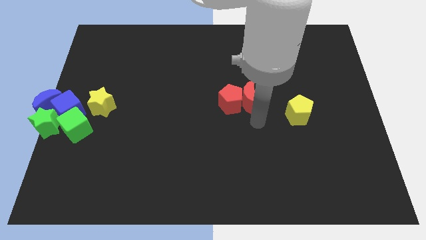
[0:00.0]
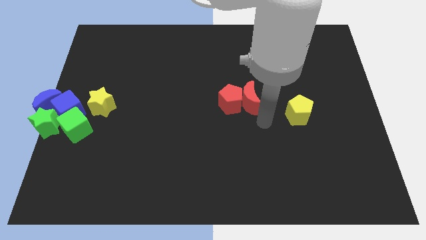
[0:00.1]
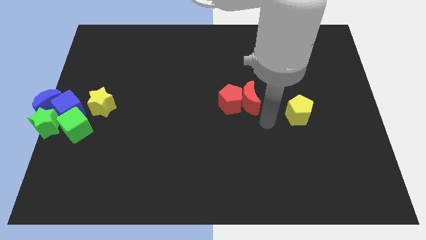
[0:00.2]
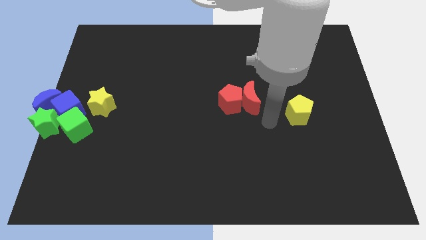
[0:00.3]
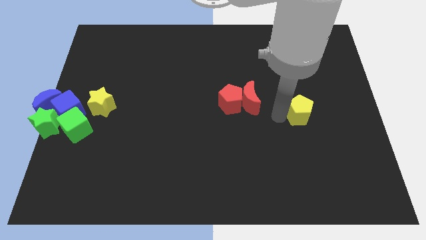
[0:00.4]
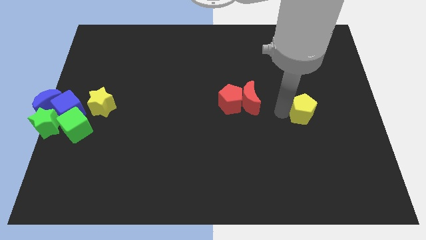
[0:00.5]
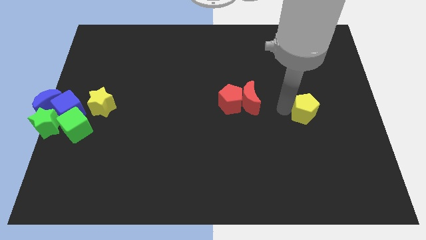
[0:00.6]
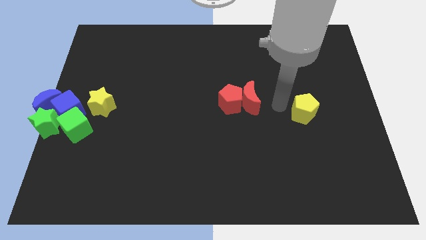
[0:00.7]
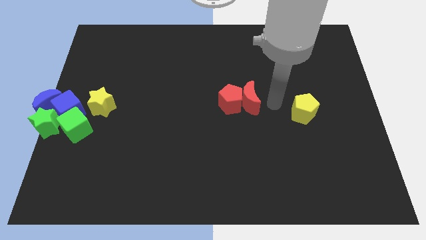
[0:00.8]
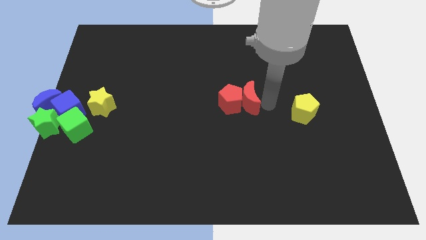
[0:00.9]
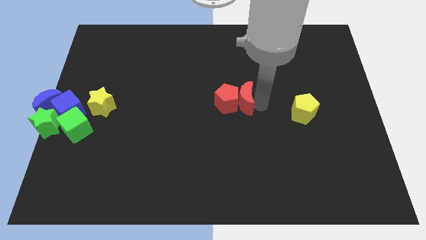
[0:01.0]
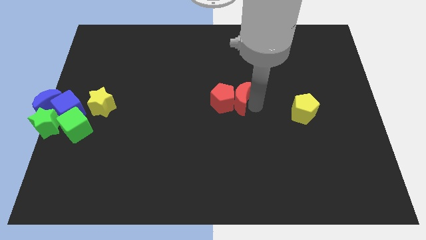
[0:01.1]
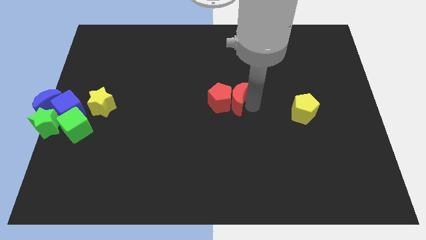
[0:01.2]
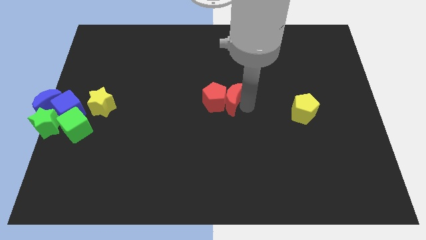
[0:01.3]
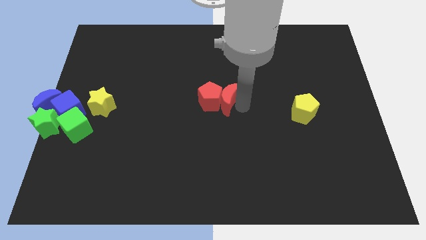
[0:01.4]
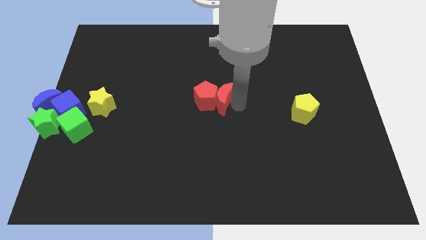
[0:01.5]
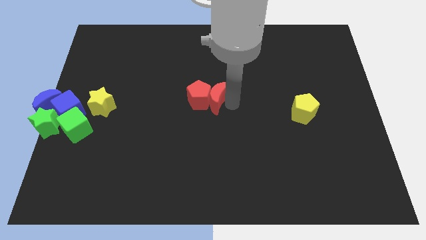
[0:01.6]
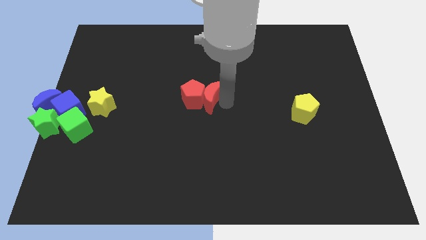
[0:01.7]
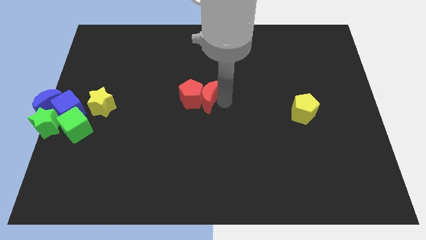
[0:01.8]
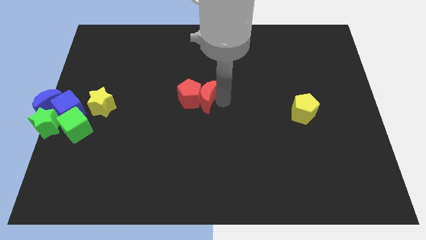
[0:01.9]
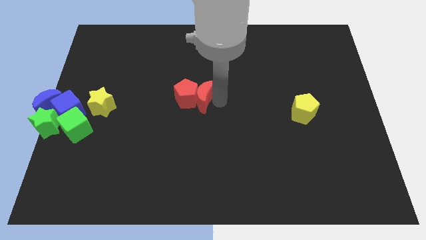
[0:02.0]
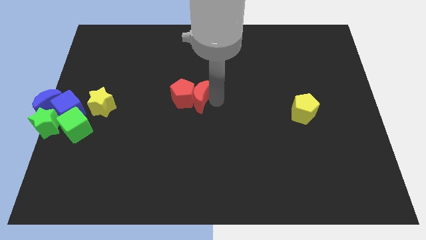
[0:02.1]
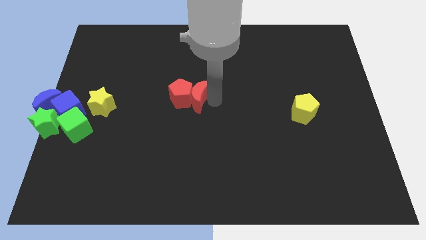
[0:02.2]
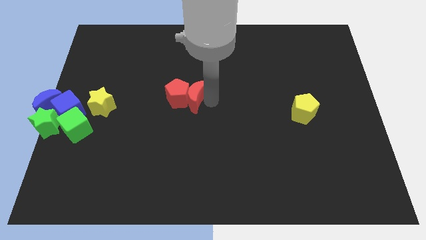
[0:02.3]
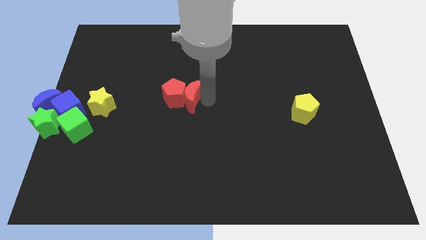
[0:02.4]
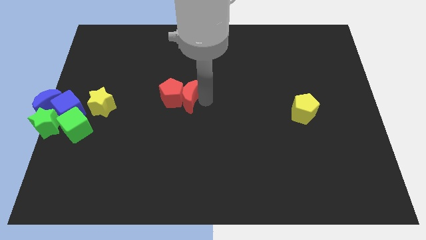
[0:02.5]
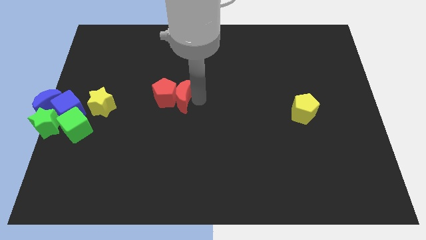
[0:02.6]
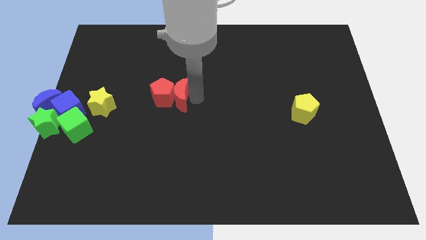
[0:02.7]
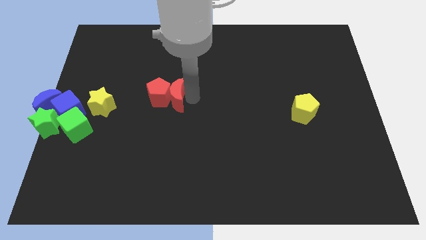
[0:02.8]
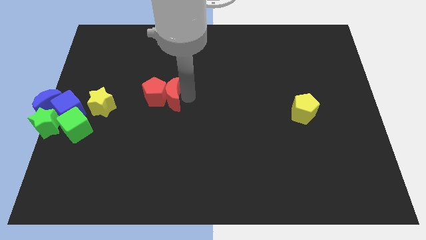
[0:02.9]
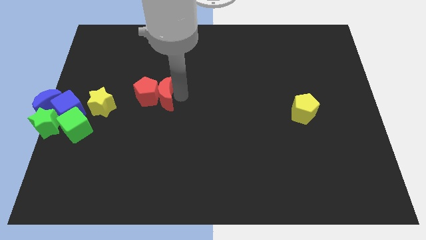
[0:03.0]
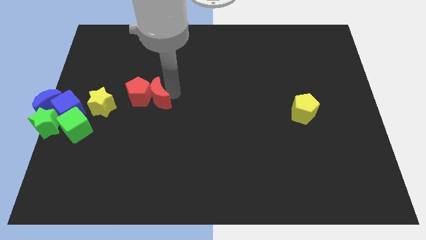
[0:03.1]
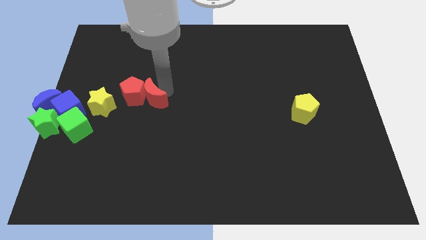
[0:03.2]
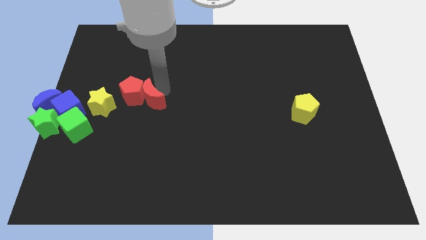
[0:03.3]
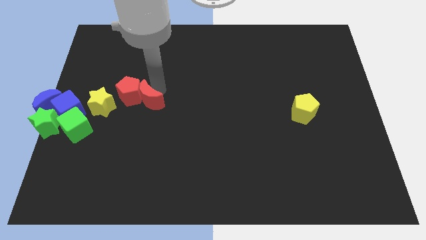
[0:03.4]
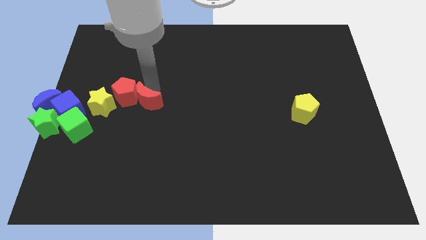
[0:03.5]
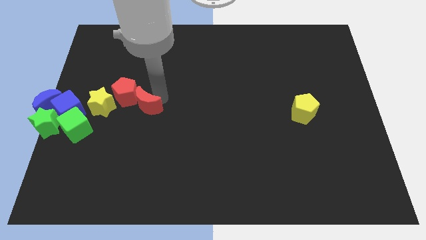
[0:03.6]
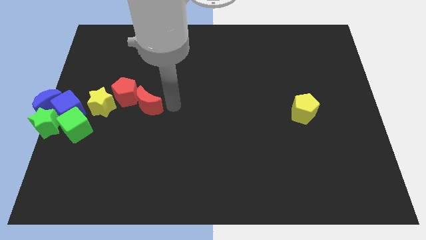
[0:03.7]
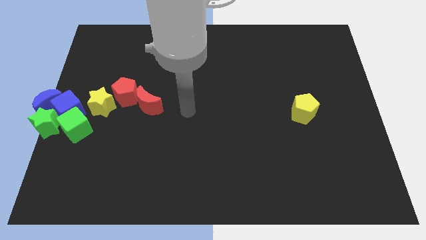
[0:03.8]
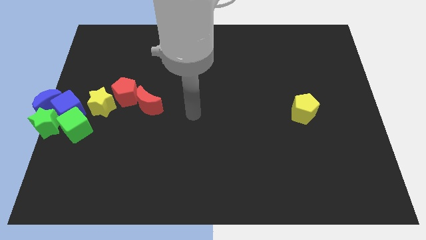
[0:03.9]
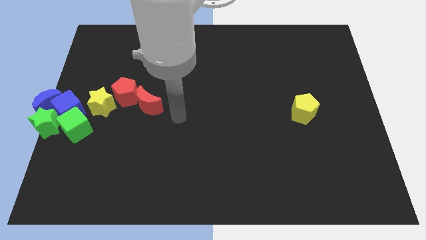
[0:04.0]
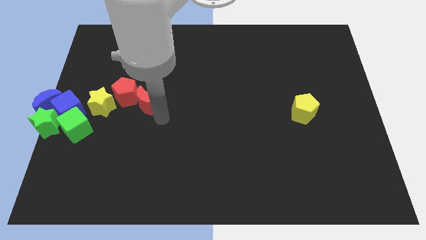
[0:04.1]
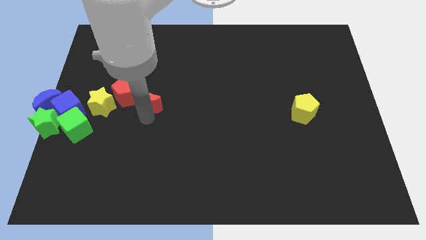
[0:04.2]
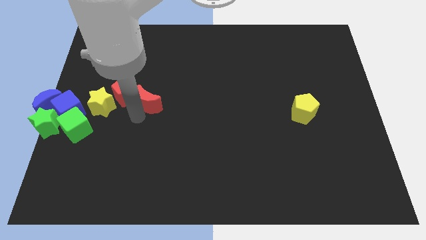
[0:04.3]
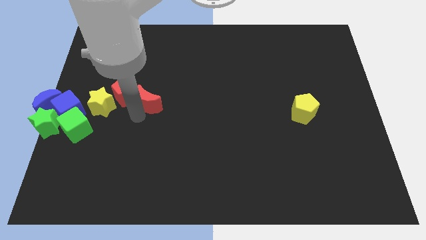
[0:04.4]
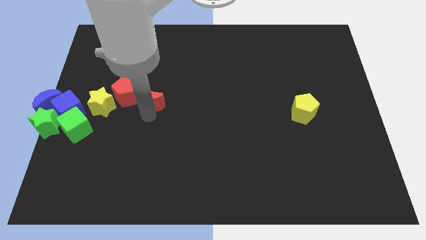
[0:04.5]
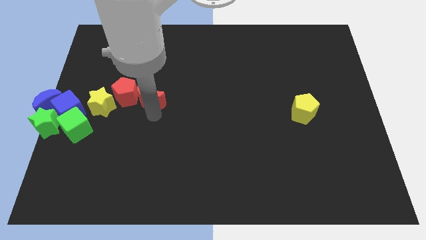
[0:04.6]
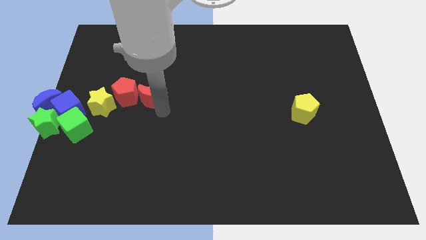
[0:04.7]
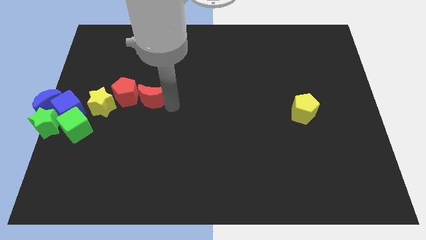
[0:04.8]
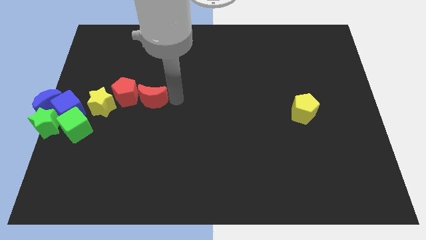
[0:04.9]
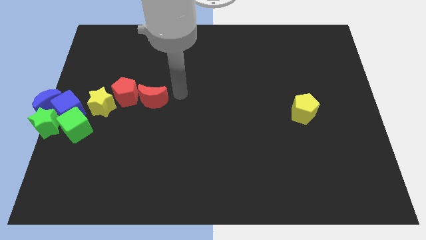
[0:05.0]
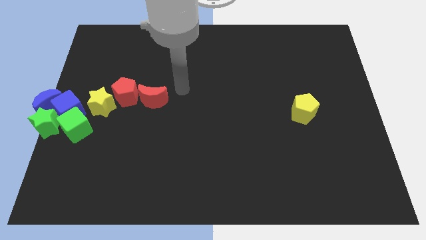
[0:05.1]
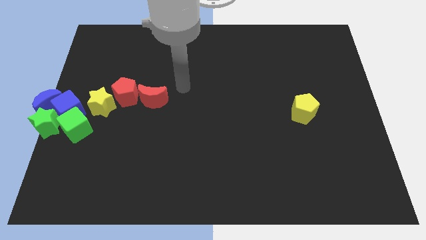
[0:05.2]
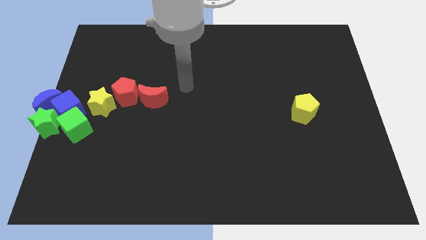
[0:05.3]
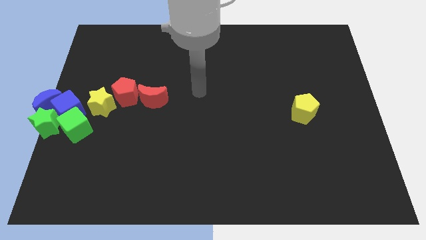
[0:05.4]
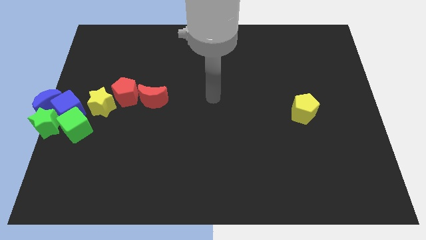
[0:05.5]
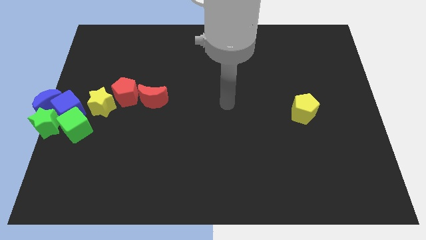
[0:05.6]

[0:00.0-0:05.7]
move the red pentagon and red moon towards the yellow star

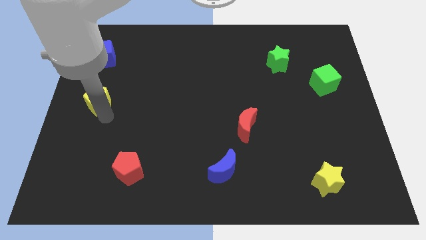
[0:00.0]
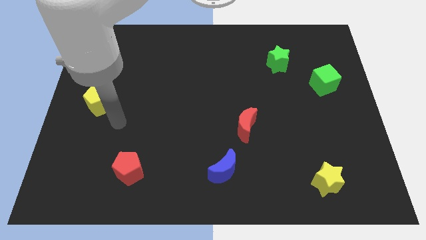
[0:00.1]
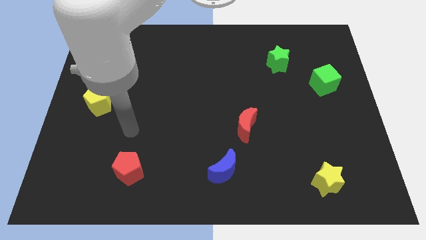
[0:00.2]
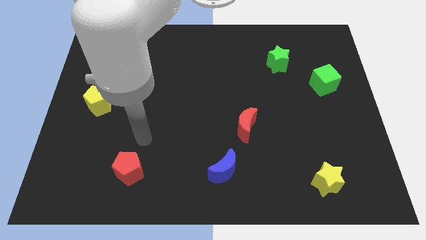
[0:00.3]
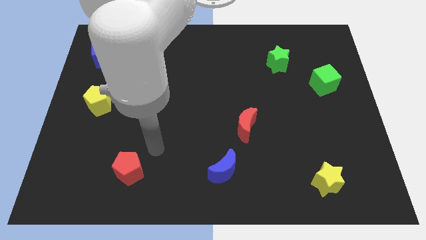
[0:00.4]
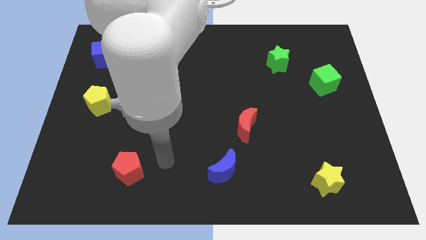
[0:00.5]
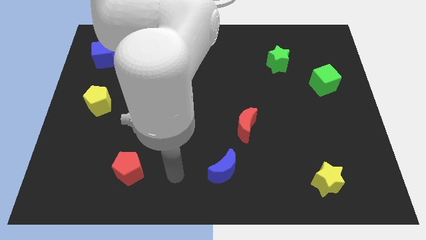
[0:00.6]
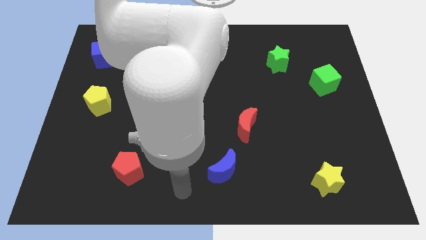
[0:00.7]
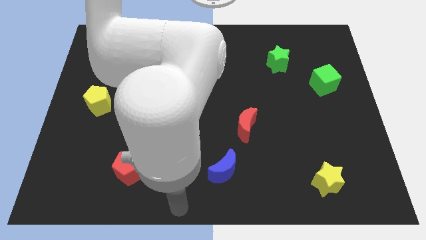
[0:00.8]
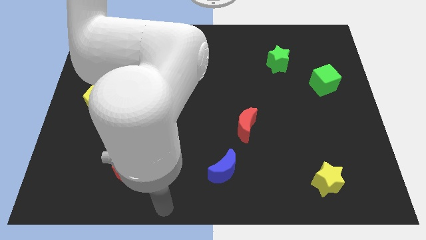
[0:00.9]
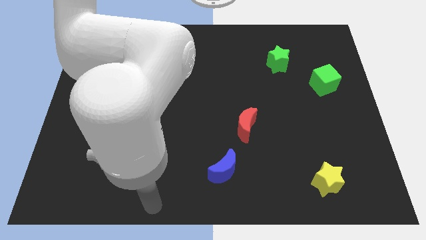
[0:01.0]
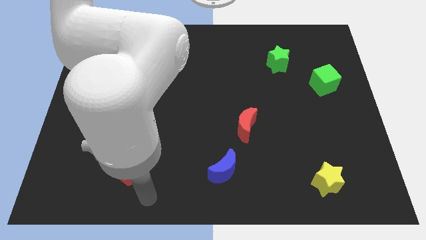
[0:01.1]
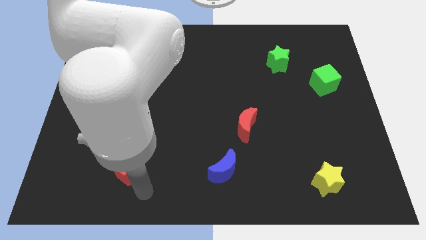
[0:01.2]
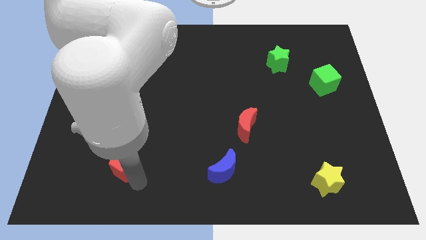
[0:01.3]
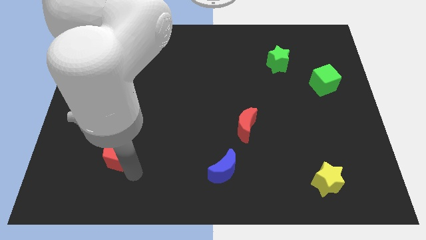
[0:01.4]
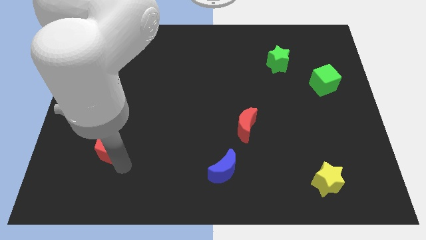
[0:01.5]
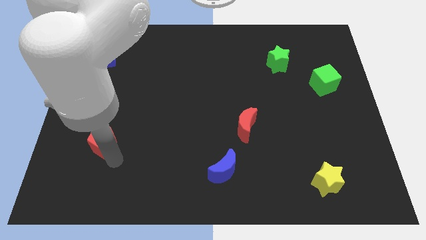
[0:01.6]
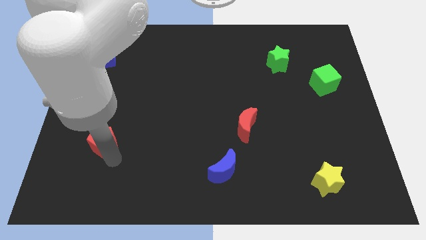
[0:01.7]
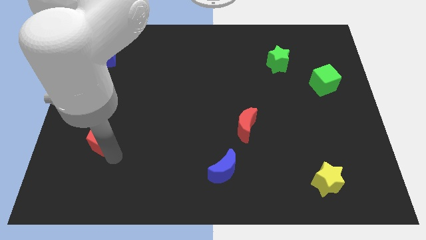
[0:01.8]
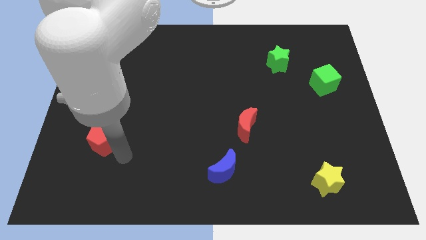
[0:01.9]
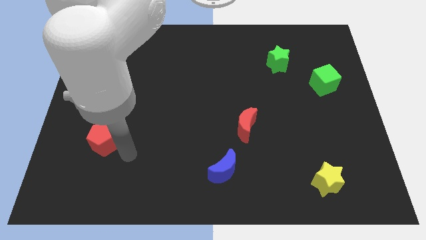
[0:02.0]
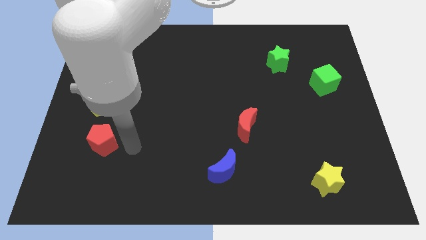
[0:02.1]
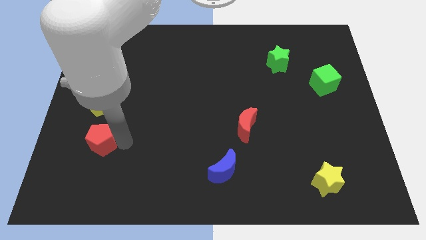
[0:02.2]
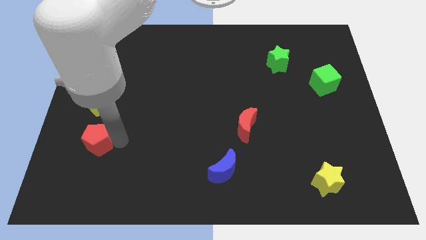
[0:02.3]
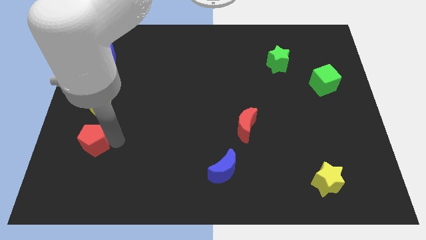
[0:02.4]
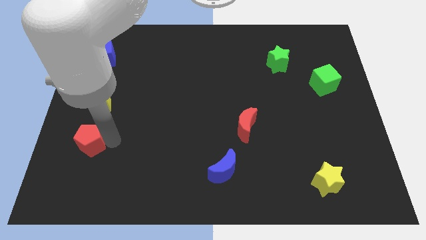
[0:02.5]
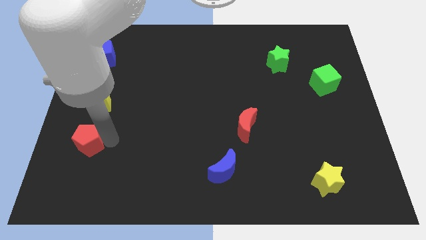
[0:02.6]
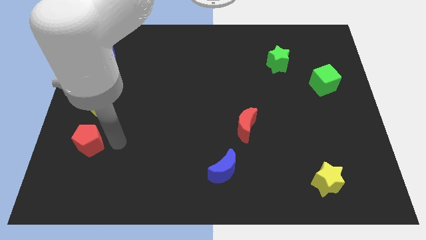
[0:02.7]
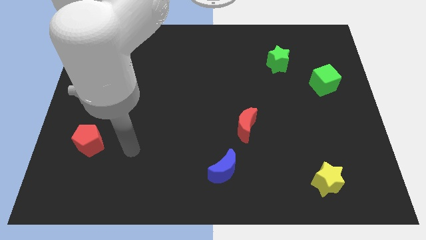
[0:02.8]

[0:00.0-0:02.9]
place the red pentagon at the bottom of yellow pentagon

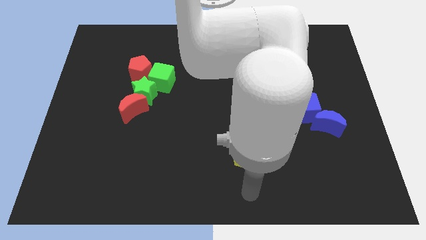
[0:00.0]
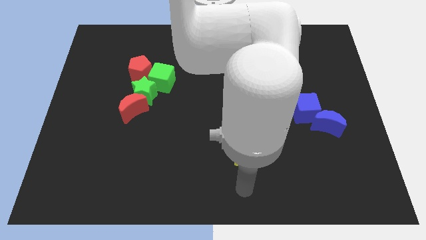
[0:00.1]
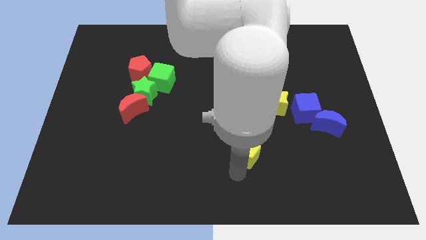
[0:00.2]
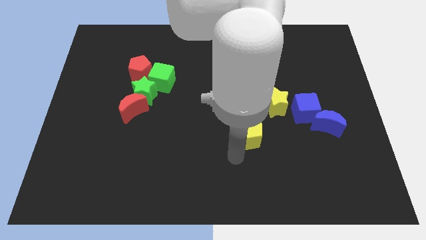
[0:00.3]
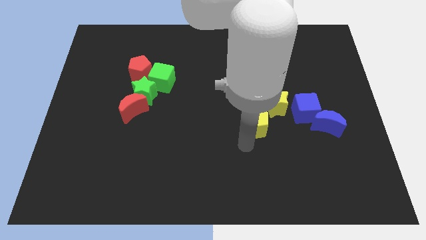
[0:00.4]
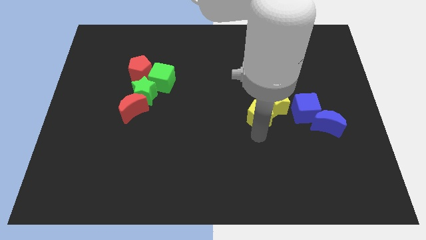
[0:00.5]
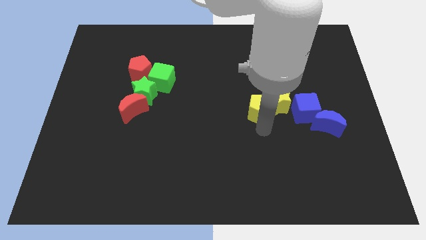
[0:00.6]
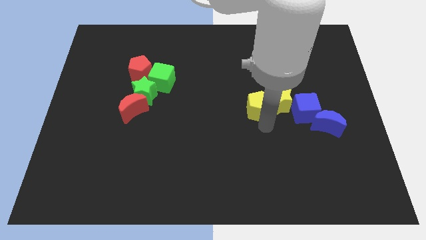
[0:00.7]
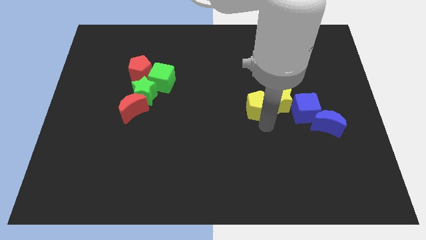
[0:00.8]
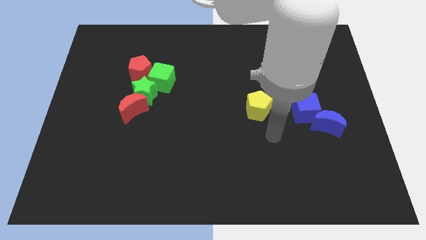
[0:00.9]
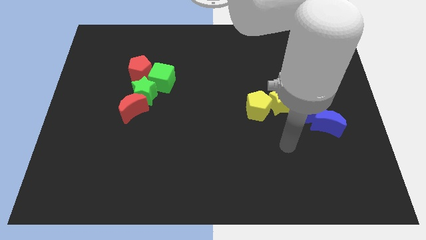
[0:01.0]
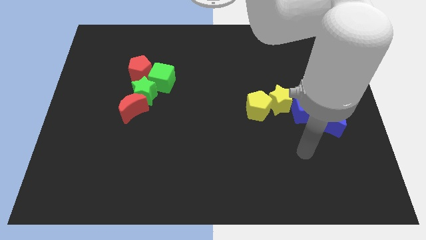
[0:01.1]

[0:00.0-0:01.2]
move the yellow pentagon towards the right side of the yellow star
